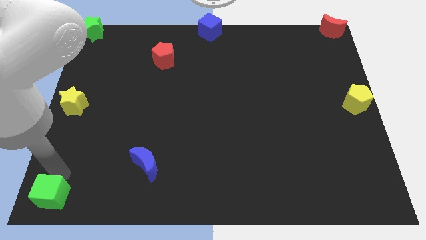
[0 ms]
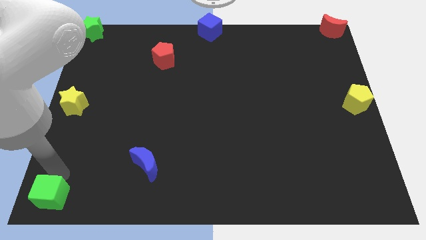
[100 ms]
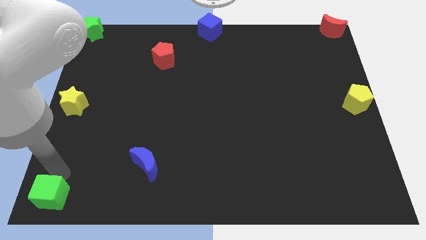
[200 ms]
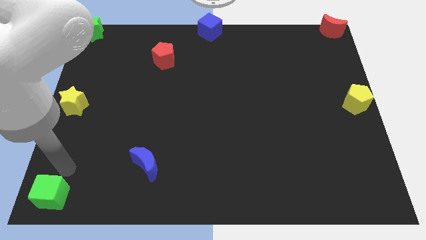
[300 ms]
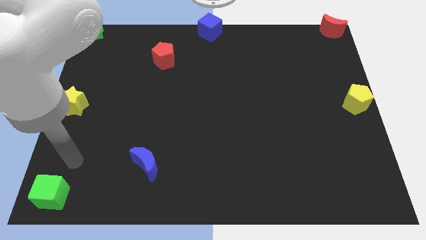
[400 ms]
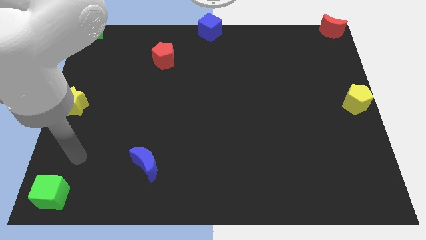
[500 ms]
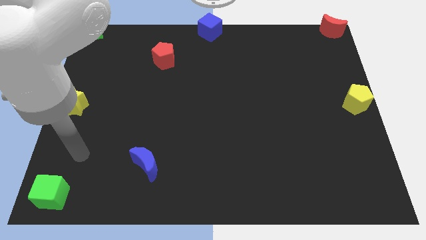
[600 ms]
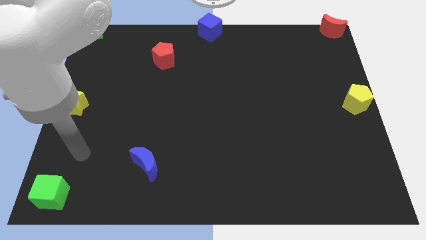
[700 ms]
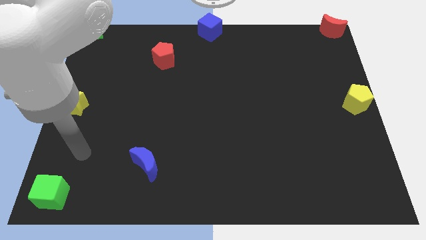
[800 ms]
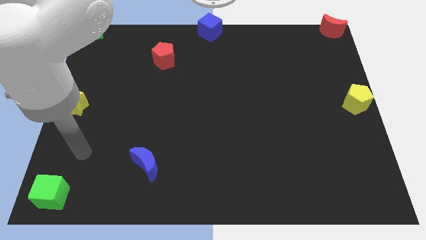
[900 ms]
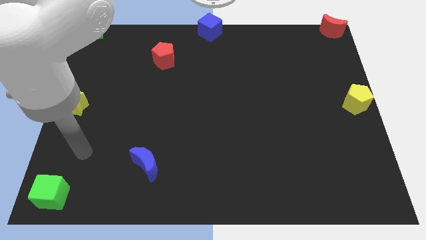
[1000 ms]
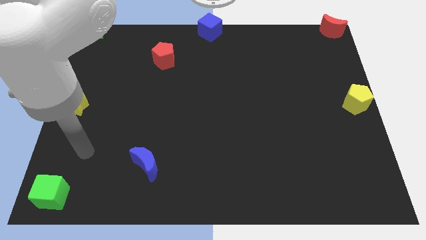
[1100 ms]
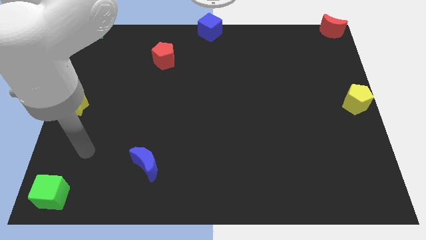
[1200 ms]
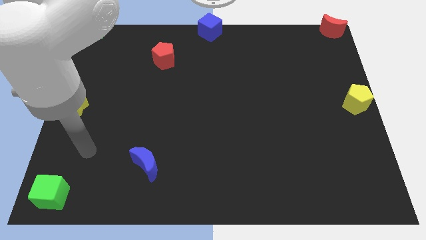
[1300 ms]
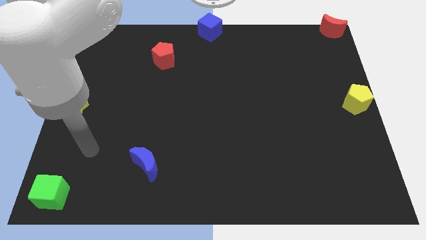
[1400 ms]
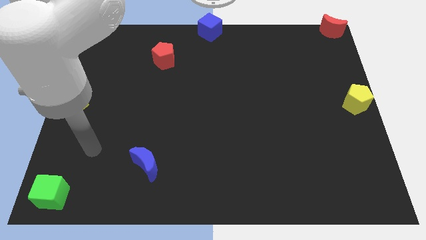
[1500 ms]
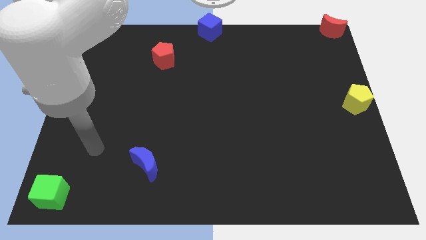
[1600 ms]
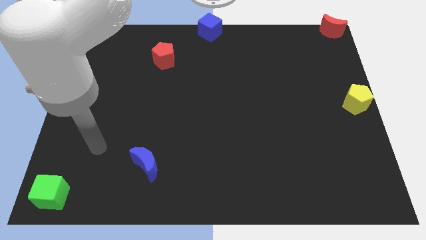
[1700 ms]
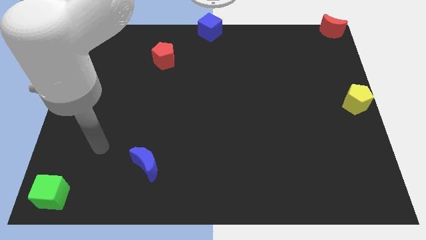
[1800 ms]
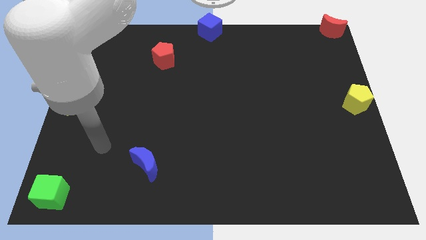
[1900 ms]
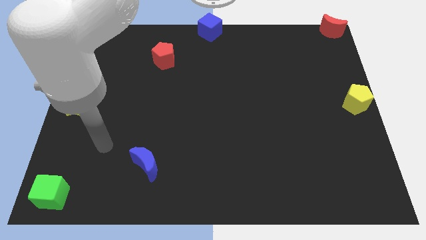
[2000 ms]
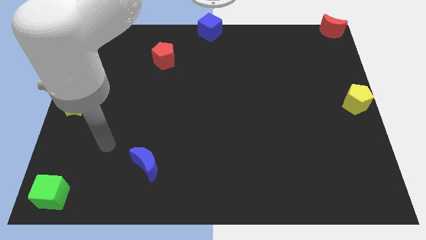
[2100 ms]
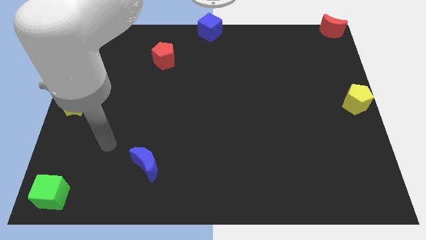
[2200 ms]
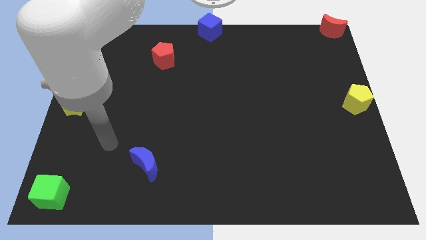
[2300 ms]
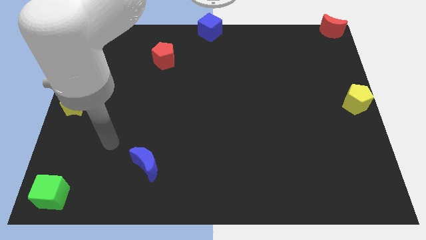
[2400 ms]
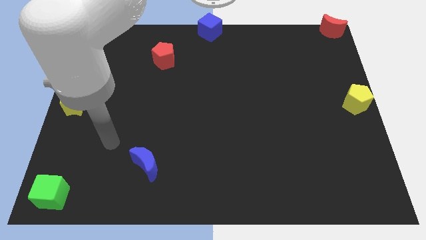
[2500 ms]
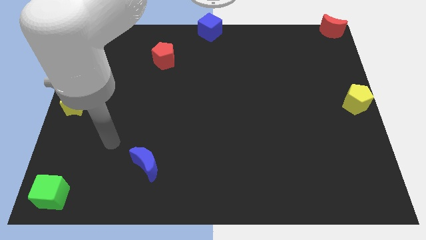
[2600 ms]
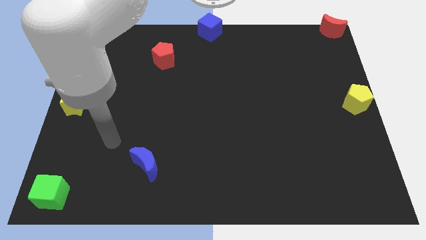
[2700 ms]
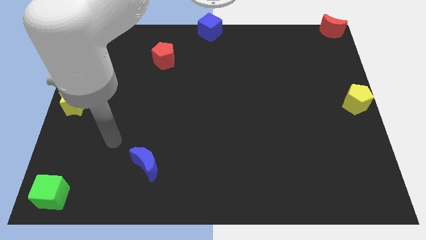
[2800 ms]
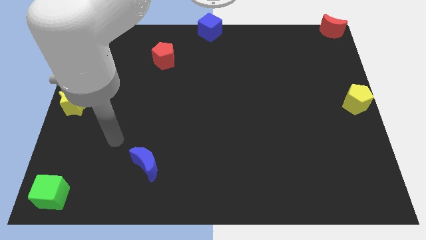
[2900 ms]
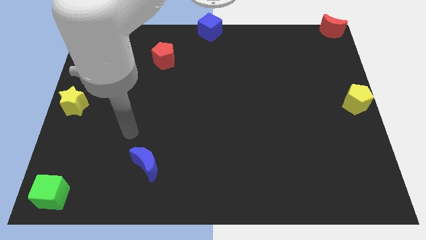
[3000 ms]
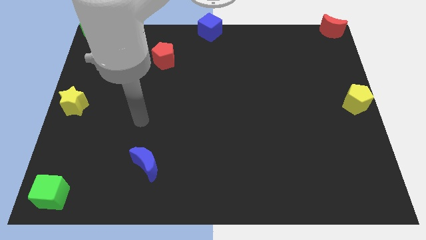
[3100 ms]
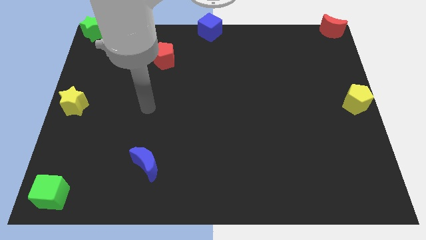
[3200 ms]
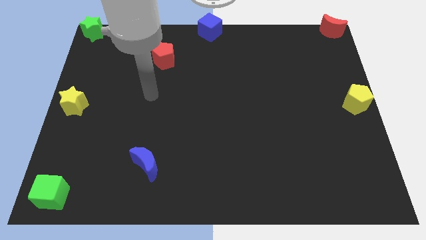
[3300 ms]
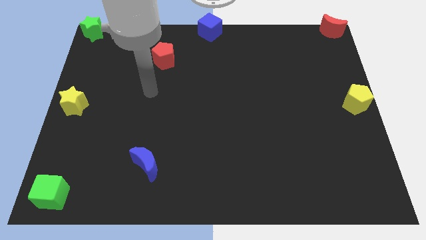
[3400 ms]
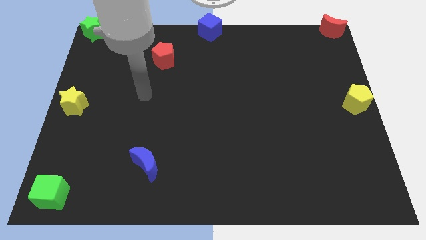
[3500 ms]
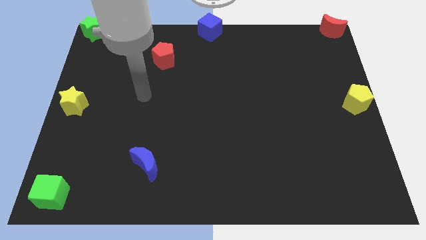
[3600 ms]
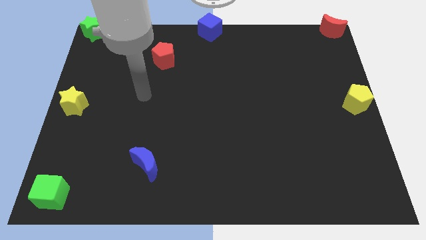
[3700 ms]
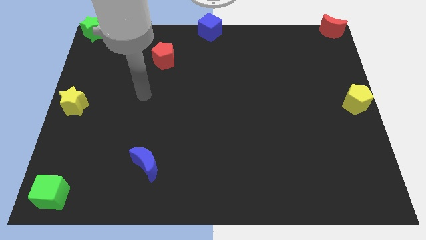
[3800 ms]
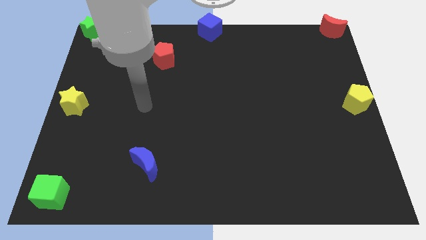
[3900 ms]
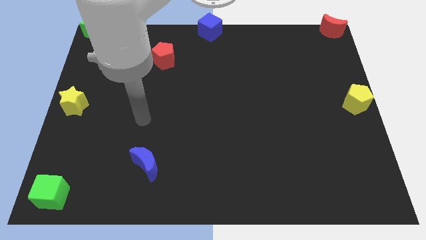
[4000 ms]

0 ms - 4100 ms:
move your arm away from the green cube

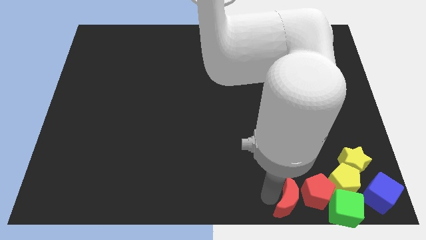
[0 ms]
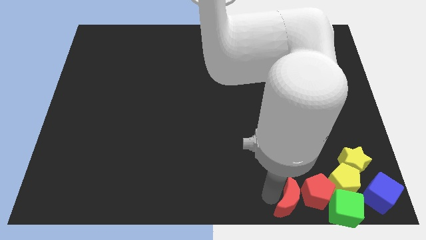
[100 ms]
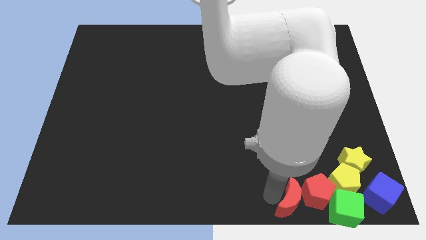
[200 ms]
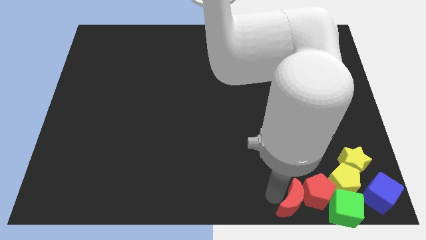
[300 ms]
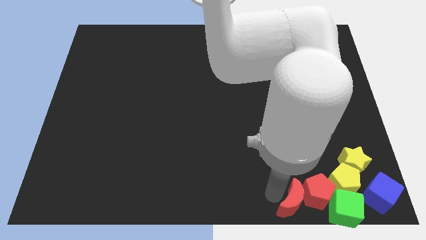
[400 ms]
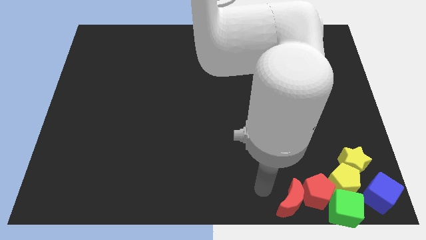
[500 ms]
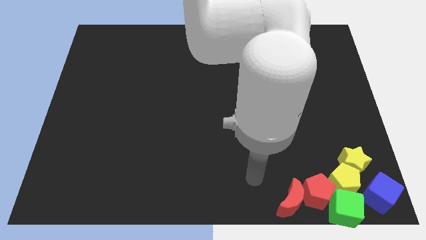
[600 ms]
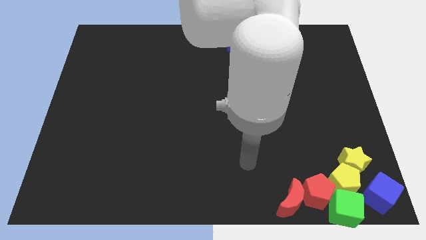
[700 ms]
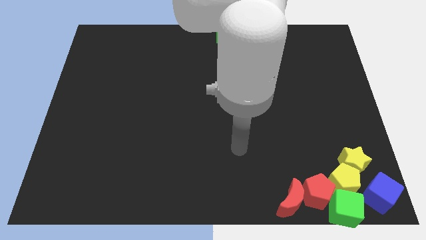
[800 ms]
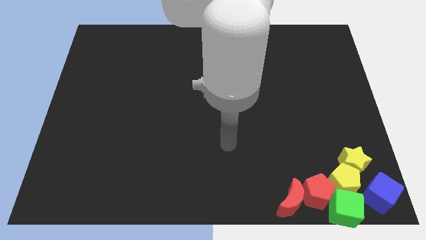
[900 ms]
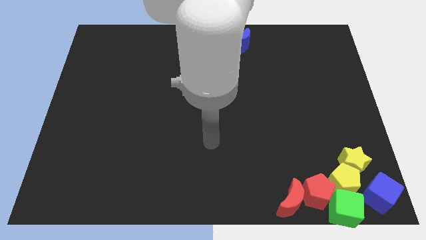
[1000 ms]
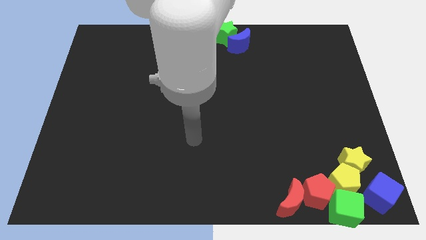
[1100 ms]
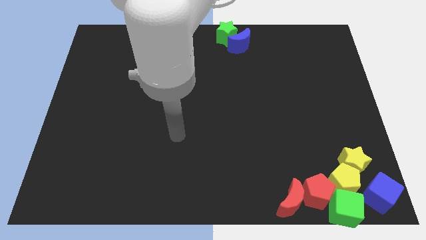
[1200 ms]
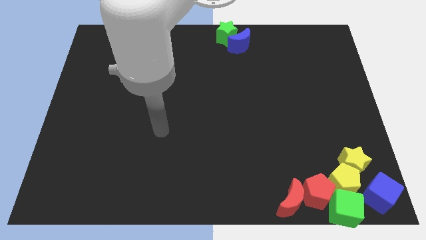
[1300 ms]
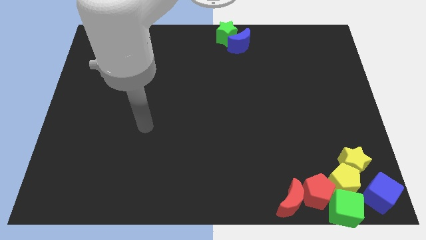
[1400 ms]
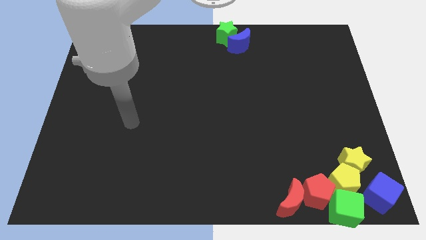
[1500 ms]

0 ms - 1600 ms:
move the red crescent to the left beside the red pentagon

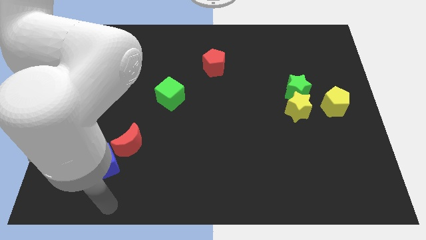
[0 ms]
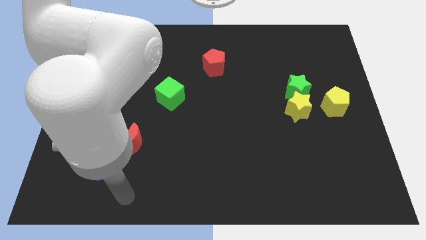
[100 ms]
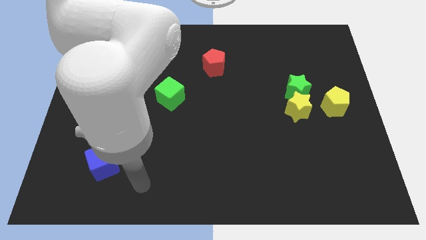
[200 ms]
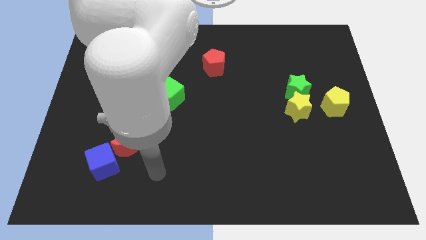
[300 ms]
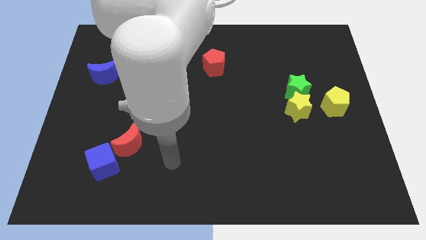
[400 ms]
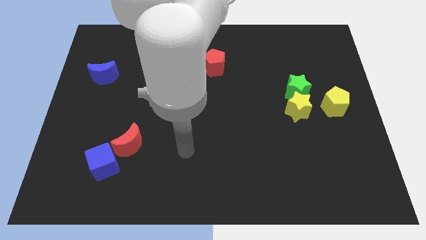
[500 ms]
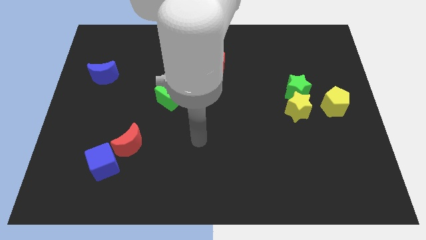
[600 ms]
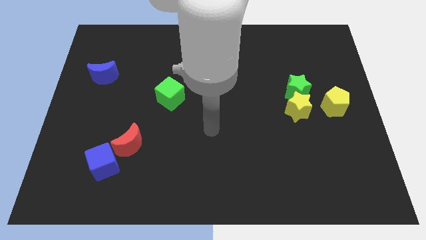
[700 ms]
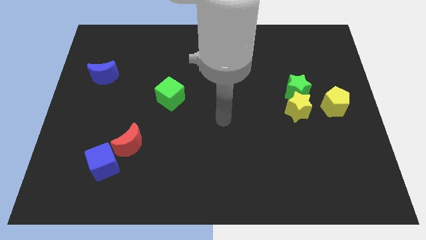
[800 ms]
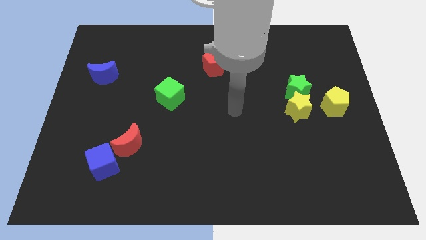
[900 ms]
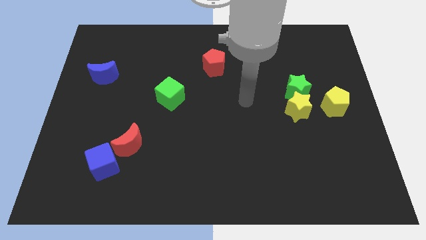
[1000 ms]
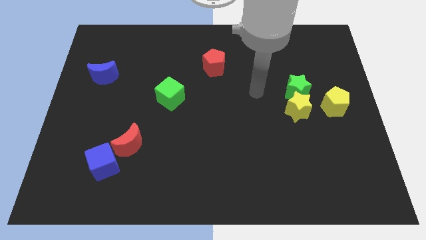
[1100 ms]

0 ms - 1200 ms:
go away from the blue cube

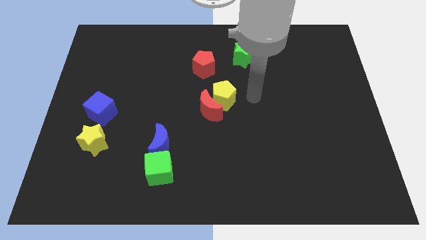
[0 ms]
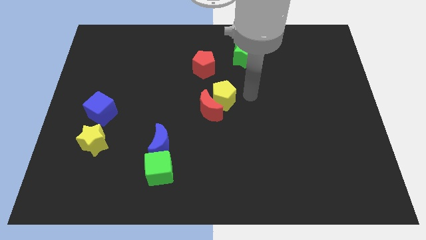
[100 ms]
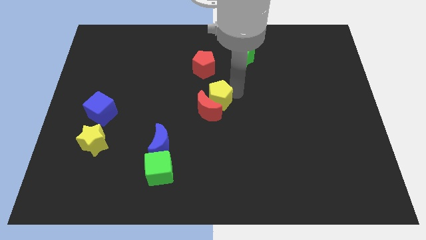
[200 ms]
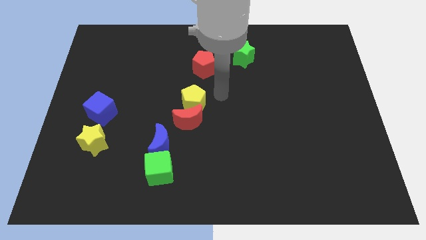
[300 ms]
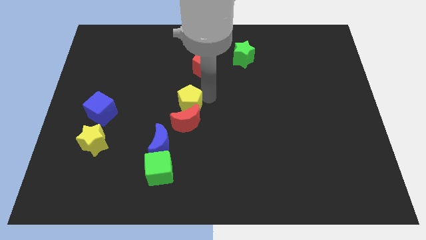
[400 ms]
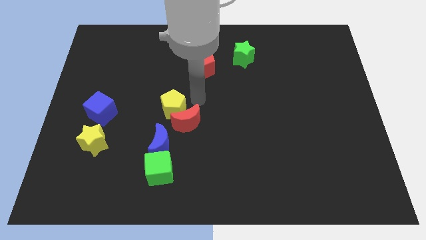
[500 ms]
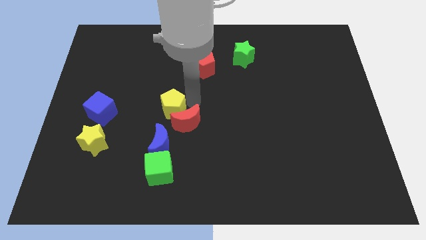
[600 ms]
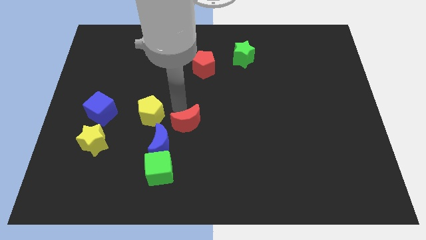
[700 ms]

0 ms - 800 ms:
push the yellow pentagon to the top of blue moon

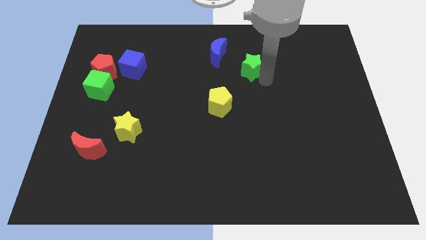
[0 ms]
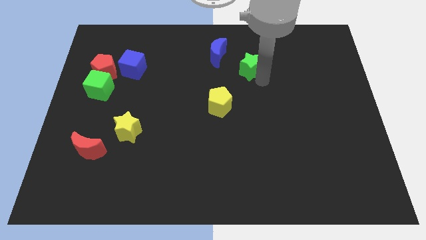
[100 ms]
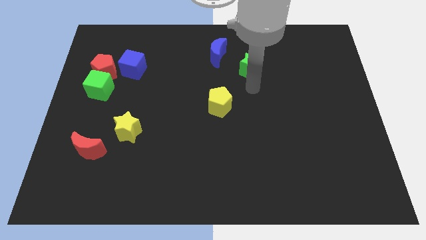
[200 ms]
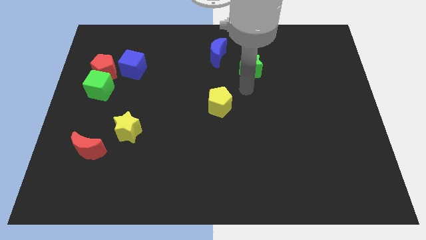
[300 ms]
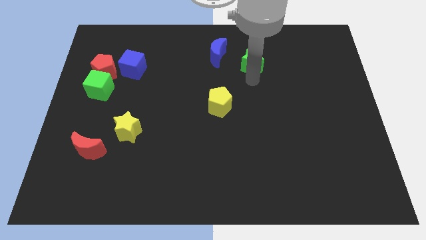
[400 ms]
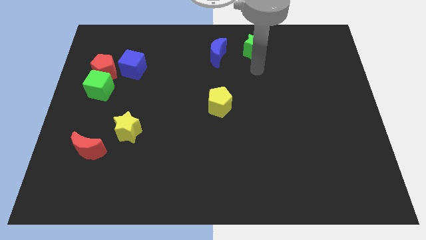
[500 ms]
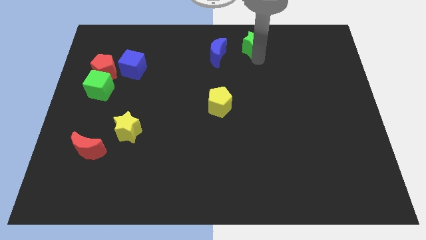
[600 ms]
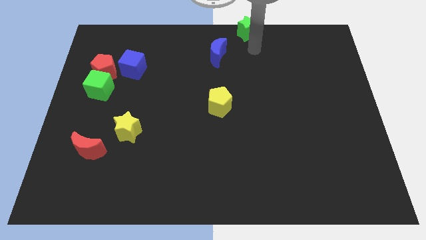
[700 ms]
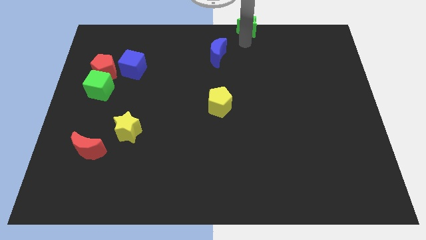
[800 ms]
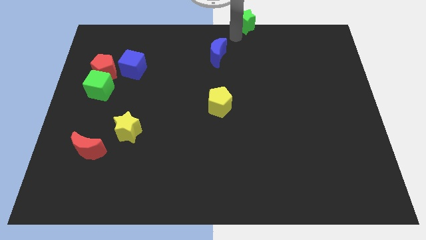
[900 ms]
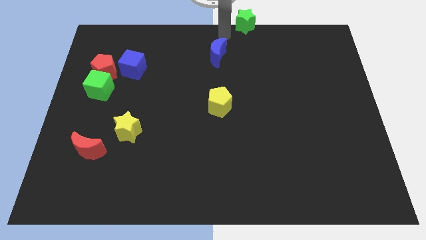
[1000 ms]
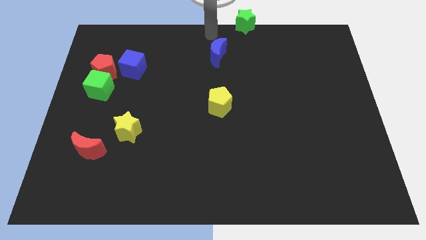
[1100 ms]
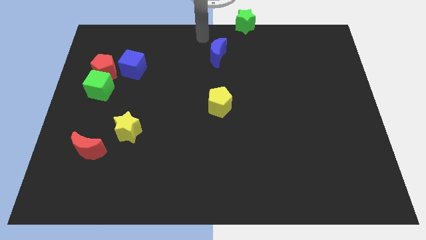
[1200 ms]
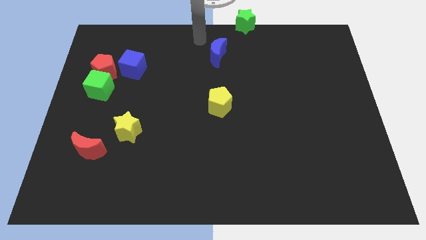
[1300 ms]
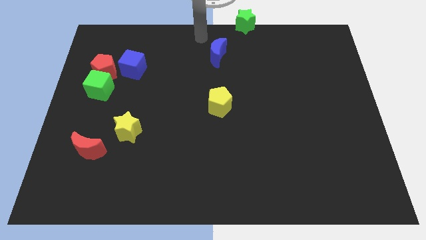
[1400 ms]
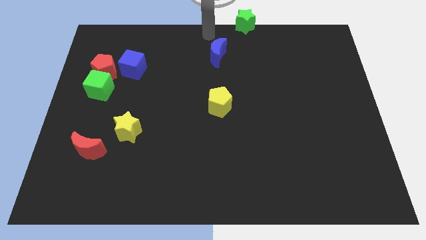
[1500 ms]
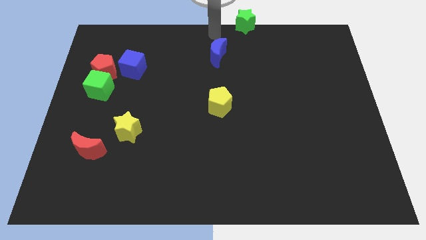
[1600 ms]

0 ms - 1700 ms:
place green star to the top center of the board
